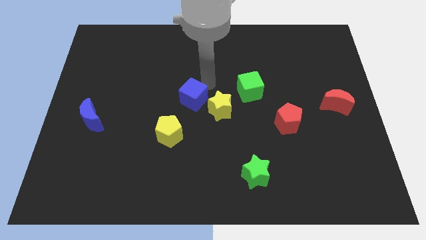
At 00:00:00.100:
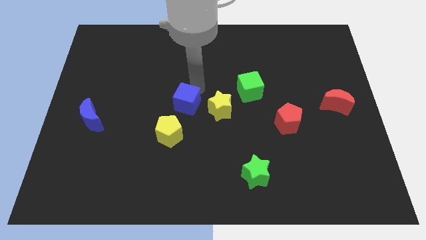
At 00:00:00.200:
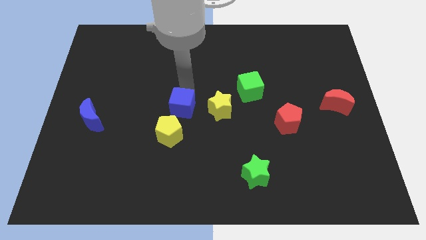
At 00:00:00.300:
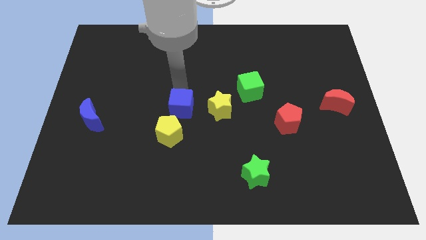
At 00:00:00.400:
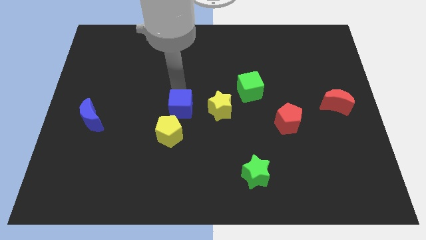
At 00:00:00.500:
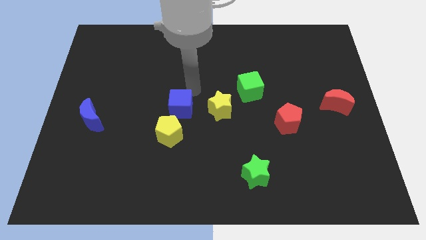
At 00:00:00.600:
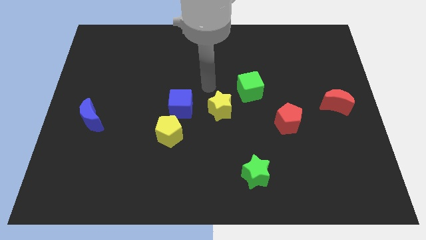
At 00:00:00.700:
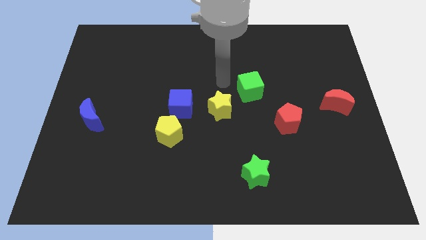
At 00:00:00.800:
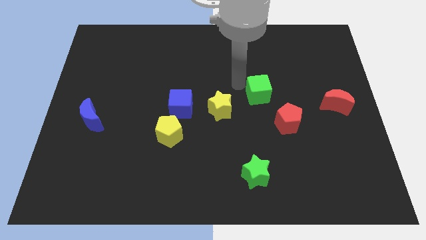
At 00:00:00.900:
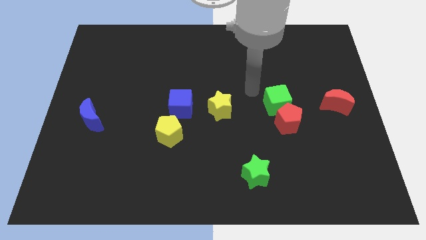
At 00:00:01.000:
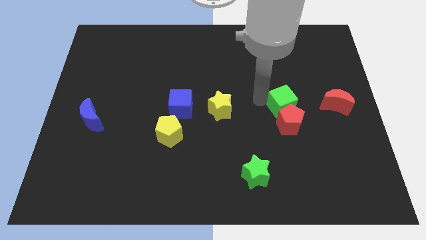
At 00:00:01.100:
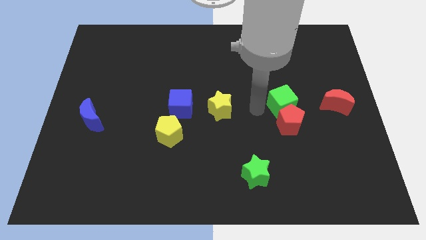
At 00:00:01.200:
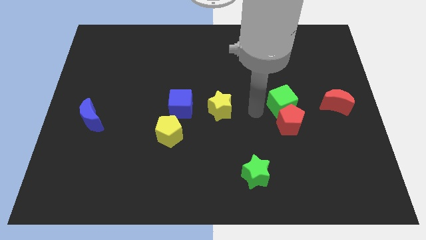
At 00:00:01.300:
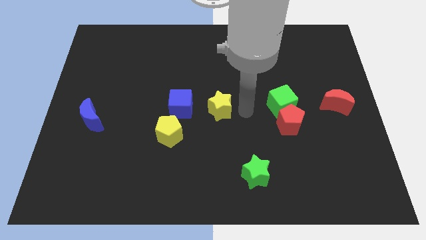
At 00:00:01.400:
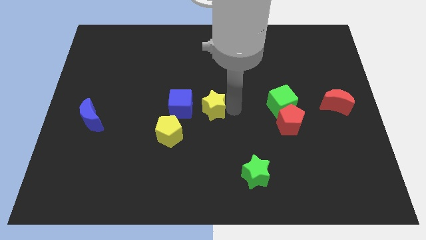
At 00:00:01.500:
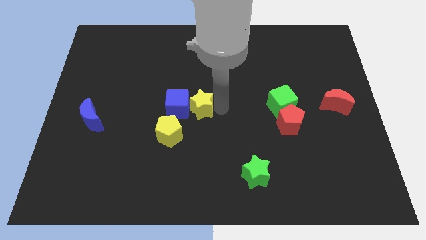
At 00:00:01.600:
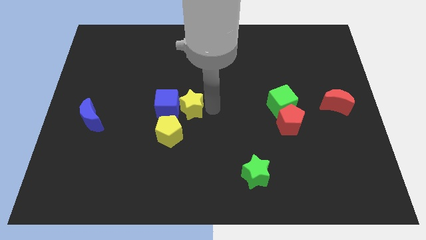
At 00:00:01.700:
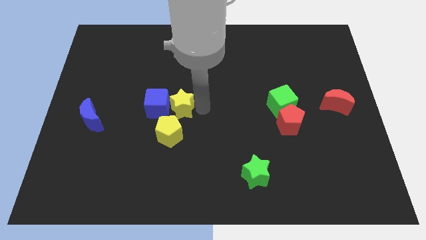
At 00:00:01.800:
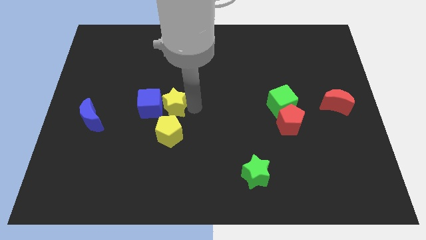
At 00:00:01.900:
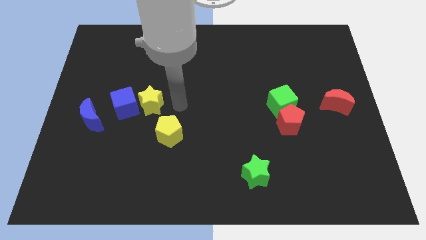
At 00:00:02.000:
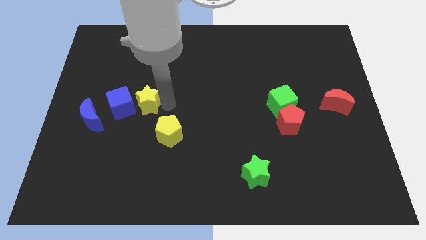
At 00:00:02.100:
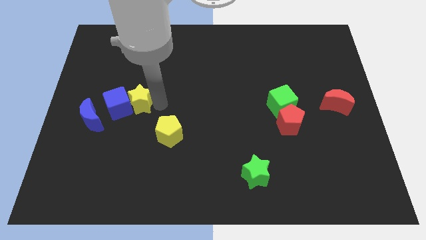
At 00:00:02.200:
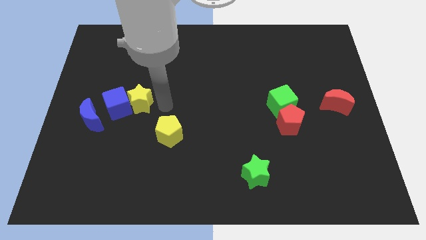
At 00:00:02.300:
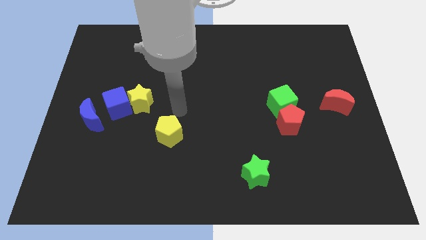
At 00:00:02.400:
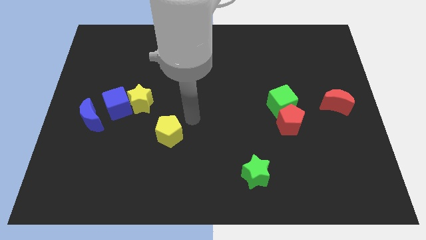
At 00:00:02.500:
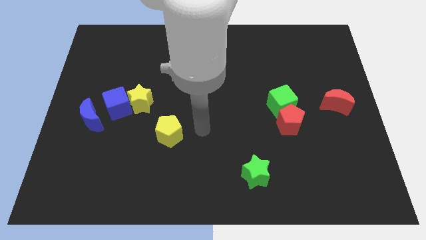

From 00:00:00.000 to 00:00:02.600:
push yellow pentagon and blue cube together towards blue moon

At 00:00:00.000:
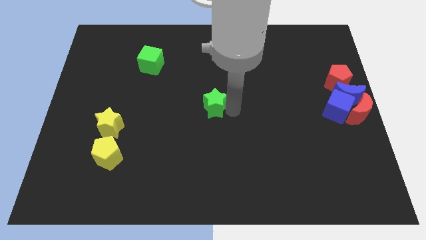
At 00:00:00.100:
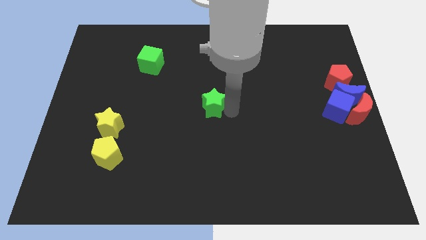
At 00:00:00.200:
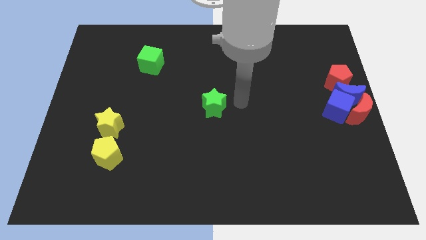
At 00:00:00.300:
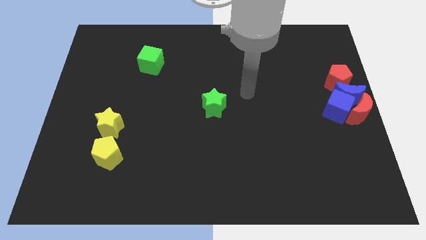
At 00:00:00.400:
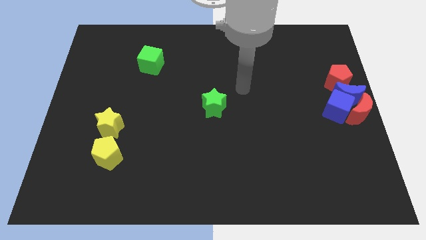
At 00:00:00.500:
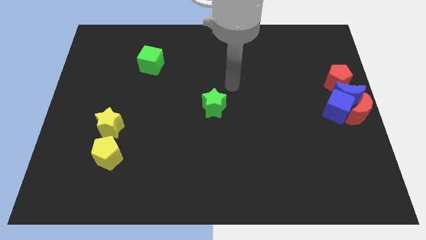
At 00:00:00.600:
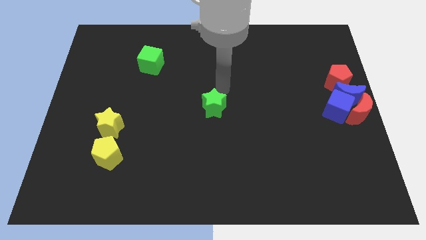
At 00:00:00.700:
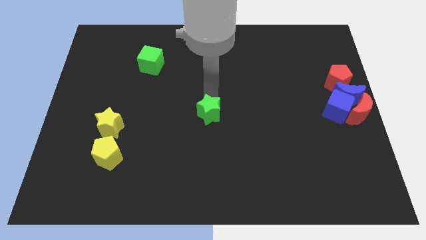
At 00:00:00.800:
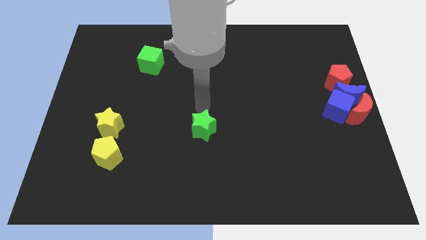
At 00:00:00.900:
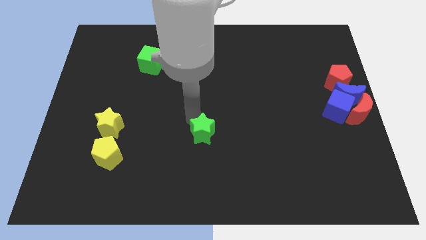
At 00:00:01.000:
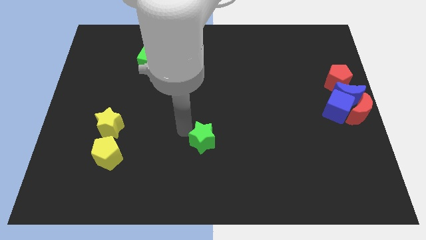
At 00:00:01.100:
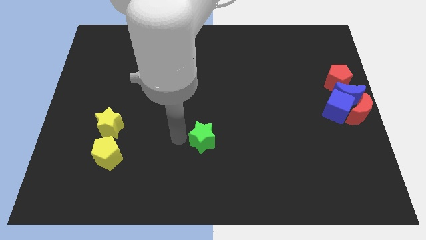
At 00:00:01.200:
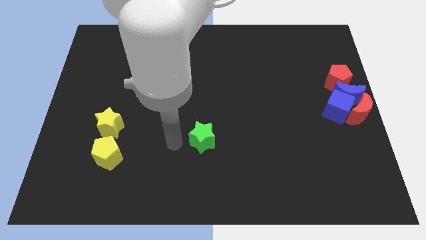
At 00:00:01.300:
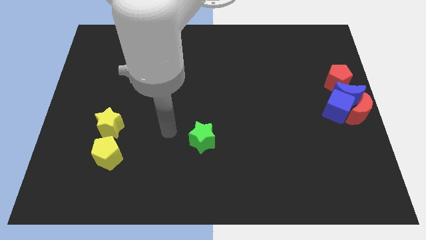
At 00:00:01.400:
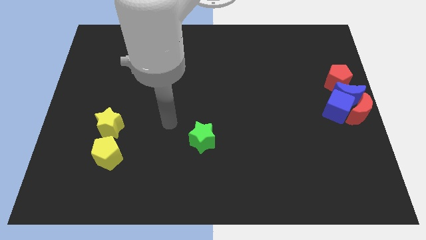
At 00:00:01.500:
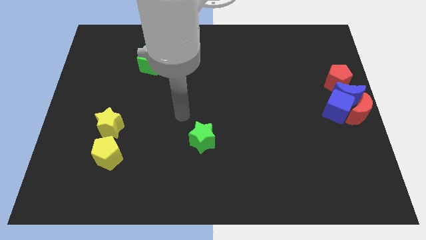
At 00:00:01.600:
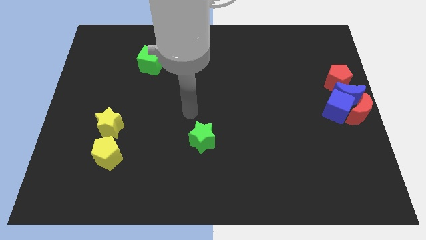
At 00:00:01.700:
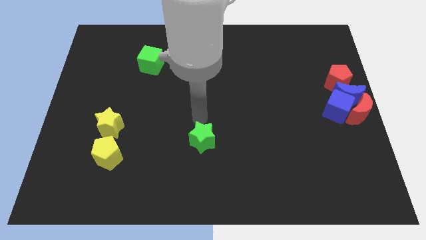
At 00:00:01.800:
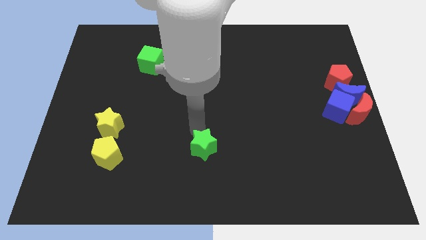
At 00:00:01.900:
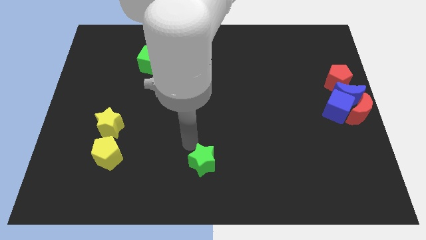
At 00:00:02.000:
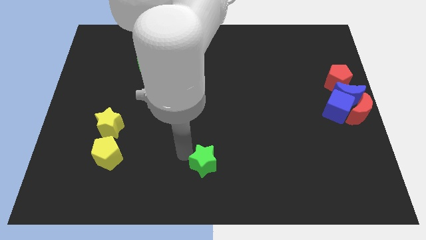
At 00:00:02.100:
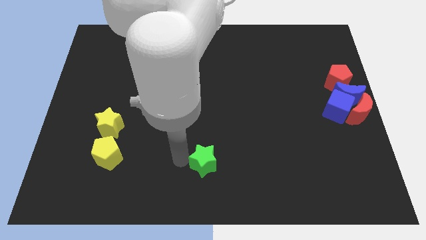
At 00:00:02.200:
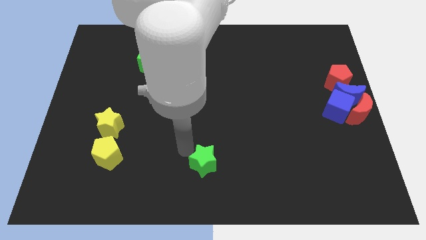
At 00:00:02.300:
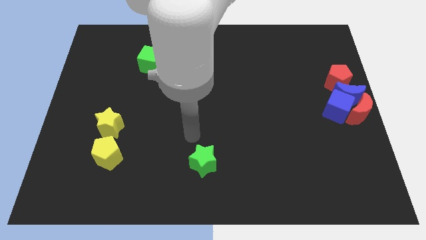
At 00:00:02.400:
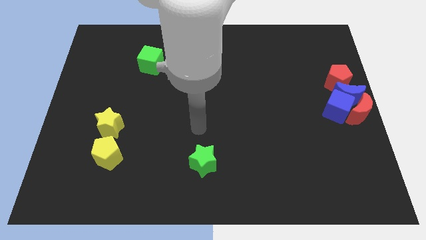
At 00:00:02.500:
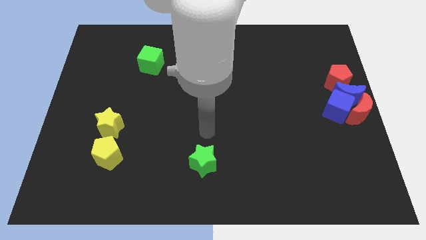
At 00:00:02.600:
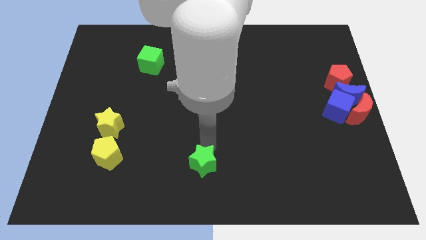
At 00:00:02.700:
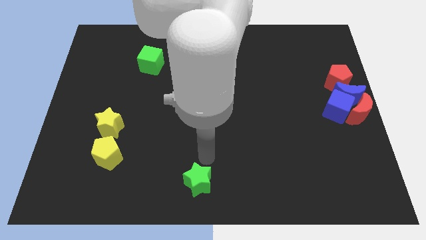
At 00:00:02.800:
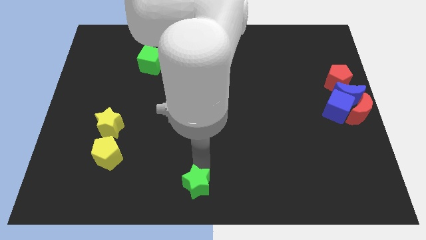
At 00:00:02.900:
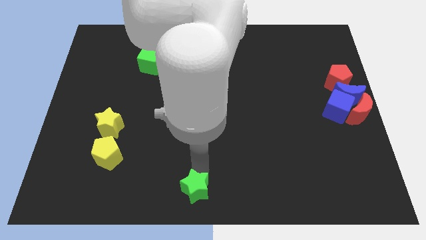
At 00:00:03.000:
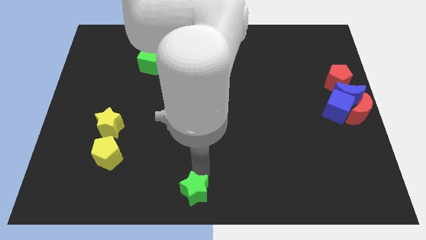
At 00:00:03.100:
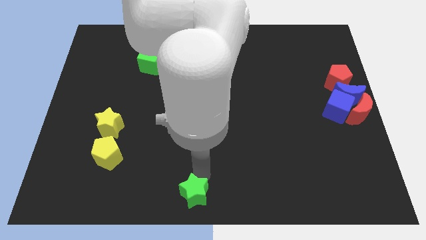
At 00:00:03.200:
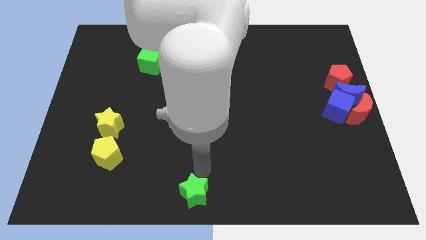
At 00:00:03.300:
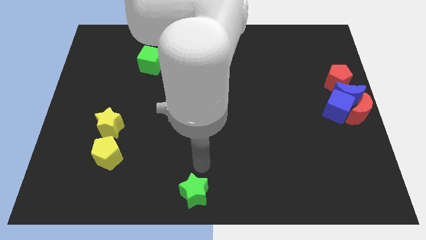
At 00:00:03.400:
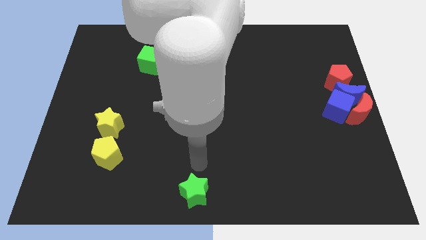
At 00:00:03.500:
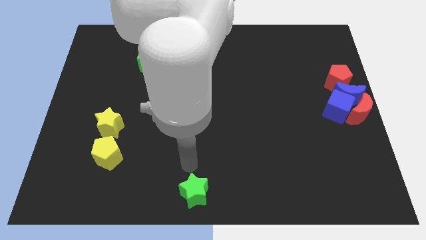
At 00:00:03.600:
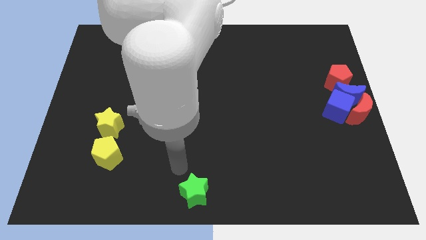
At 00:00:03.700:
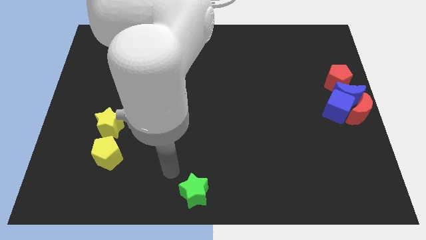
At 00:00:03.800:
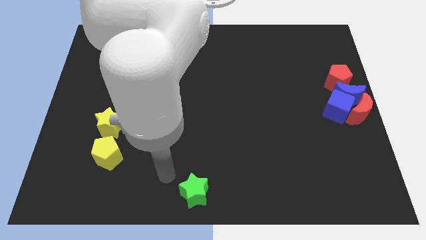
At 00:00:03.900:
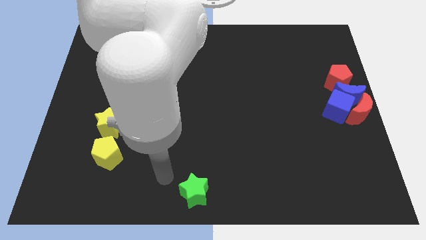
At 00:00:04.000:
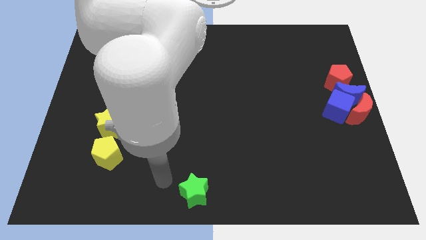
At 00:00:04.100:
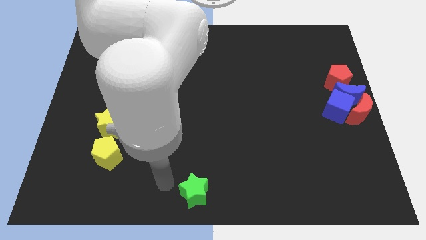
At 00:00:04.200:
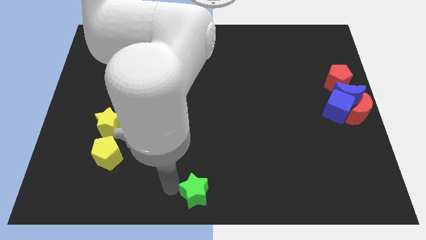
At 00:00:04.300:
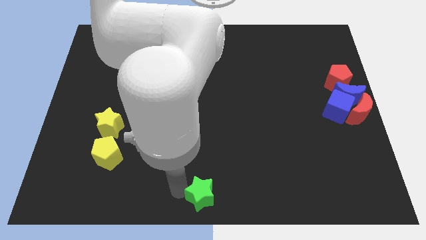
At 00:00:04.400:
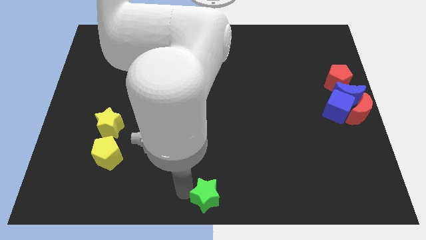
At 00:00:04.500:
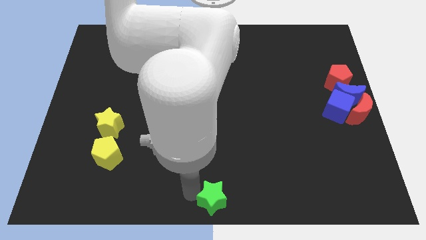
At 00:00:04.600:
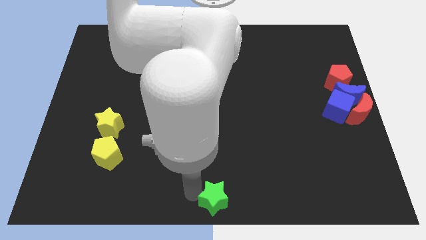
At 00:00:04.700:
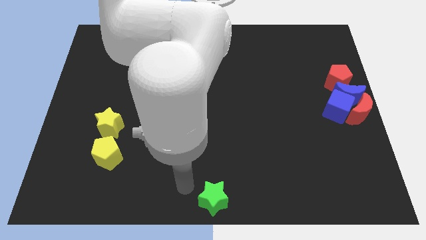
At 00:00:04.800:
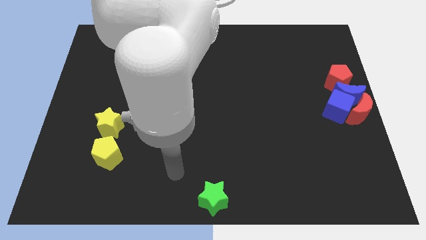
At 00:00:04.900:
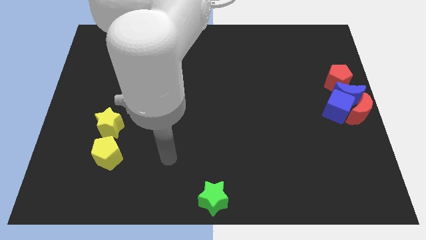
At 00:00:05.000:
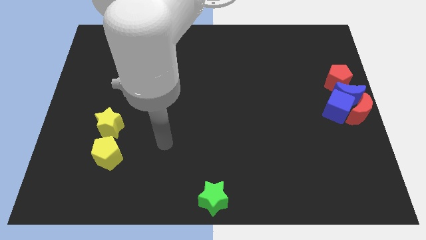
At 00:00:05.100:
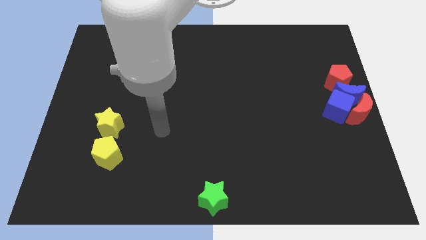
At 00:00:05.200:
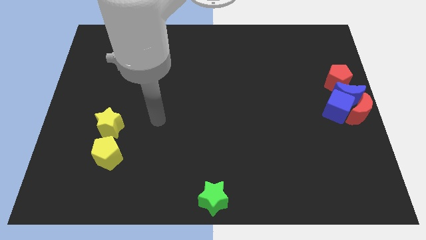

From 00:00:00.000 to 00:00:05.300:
move the green star to the bottom center of the board

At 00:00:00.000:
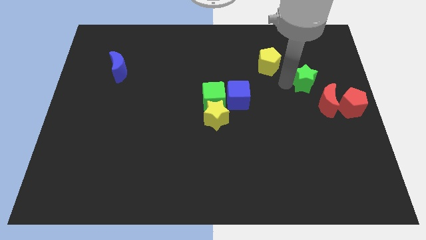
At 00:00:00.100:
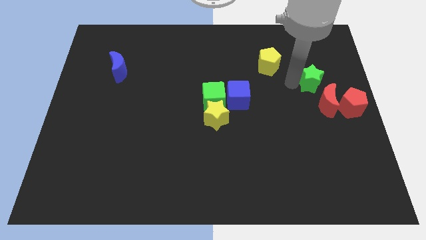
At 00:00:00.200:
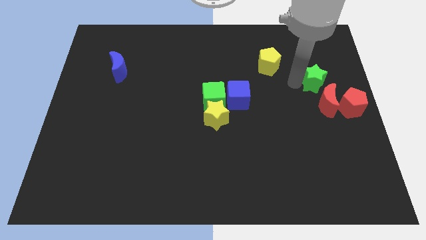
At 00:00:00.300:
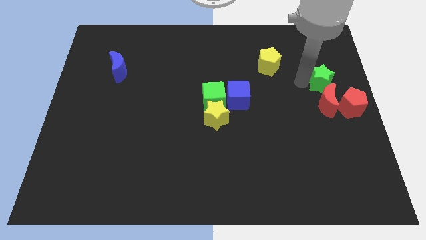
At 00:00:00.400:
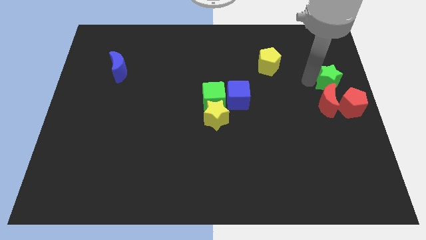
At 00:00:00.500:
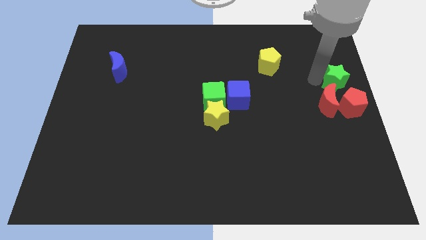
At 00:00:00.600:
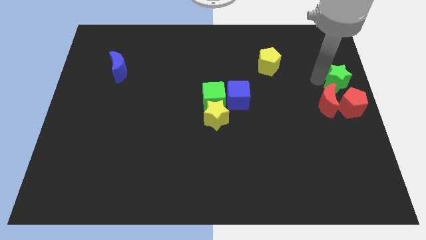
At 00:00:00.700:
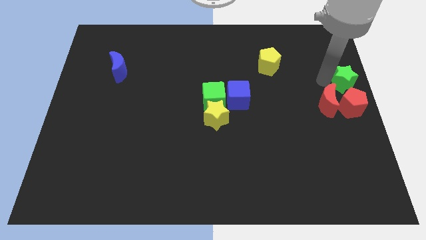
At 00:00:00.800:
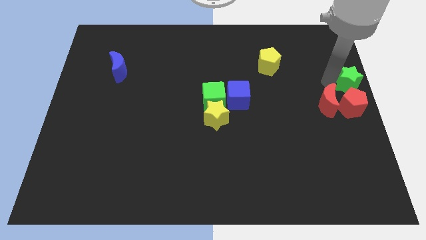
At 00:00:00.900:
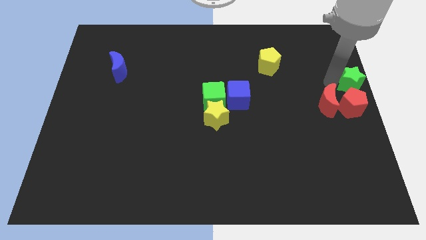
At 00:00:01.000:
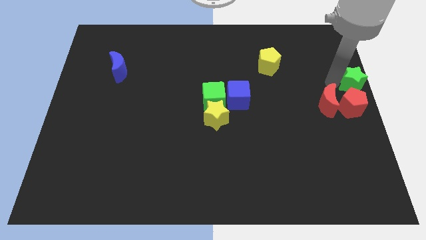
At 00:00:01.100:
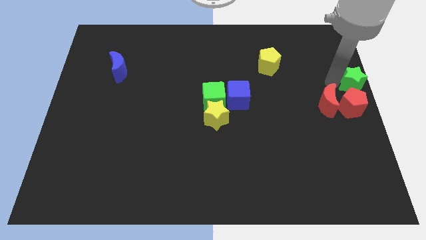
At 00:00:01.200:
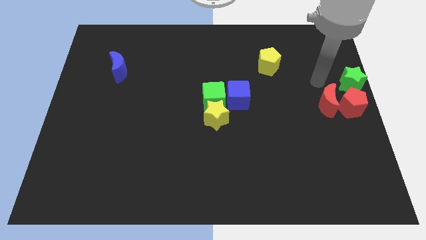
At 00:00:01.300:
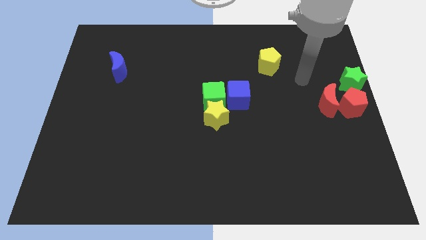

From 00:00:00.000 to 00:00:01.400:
place green star above the red pentagon
